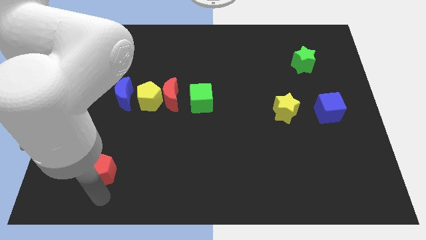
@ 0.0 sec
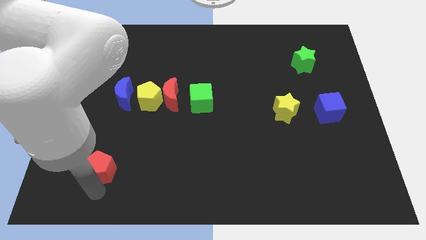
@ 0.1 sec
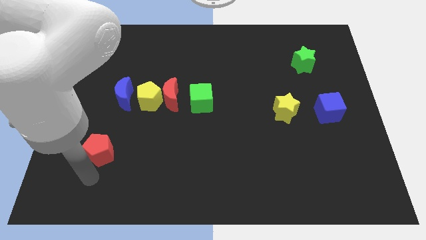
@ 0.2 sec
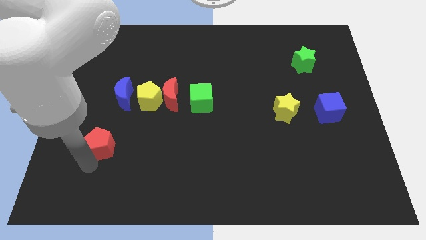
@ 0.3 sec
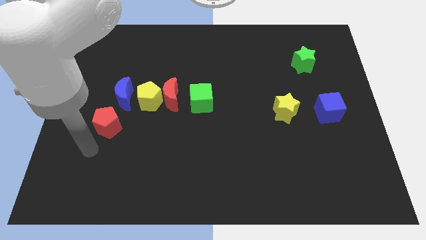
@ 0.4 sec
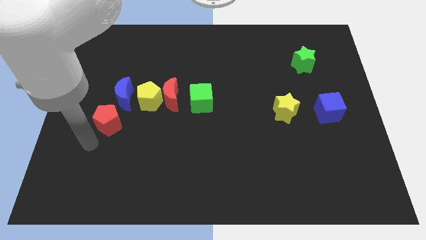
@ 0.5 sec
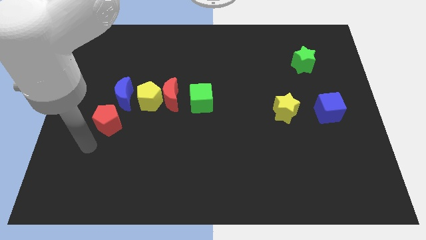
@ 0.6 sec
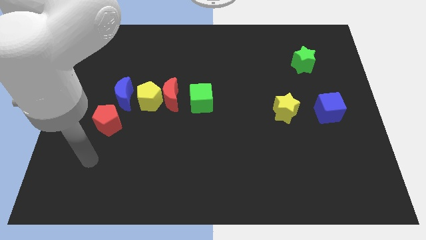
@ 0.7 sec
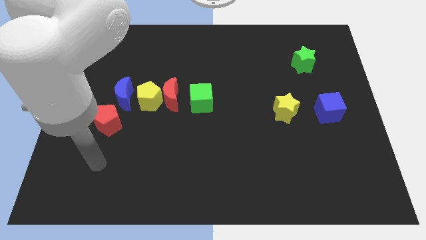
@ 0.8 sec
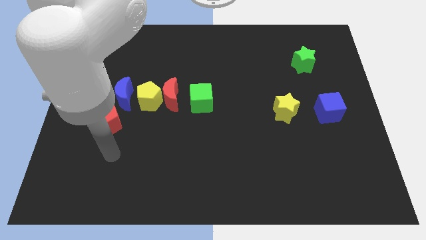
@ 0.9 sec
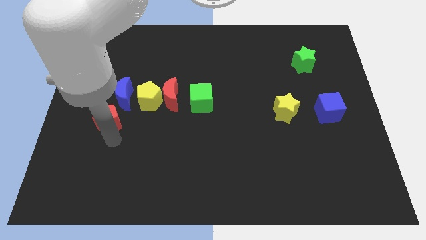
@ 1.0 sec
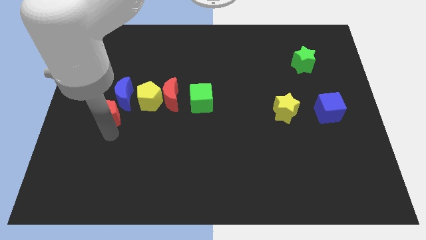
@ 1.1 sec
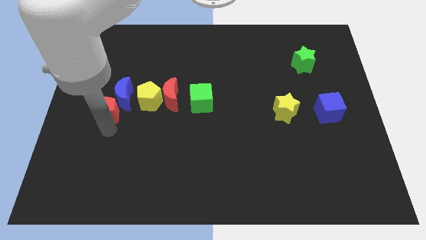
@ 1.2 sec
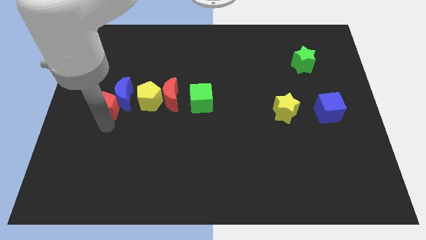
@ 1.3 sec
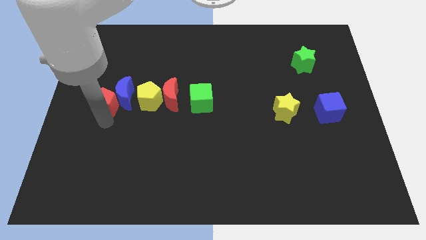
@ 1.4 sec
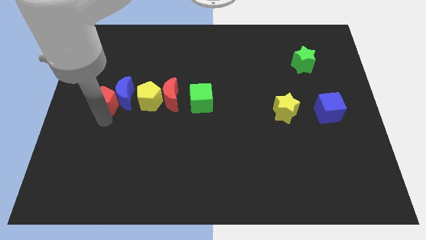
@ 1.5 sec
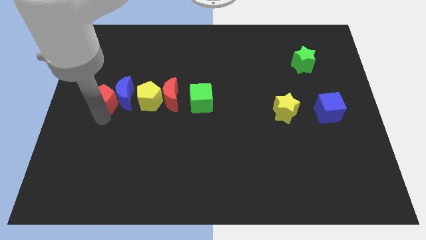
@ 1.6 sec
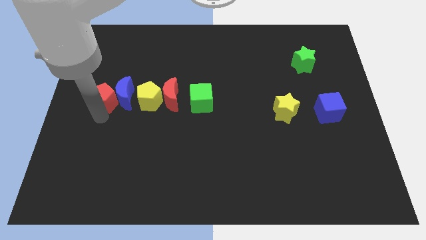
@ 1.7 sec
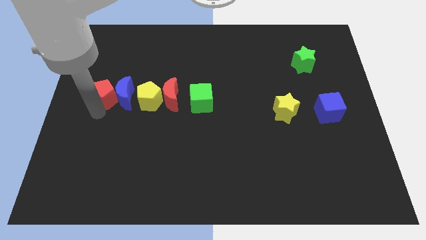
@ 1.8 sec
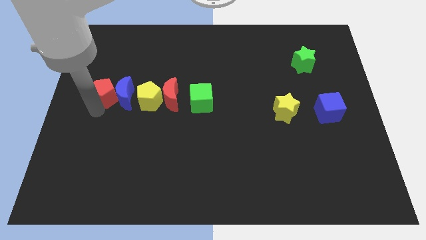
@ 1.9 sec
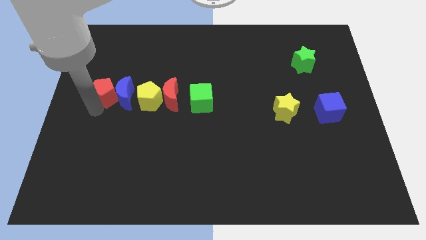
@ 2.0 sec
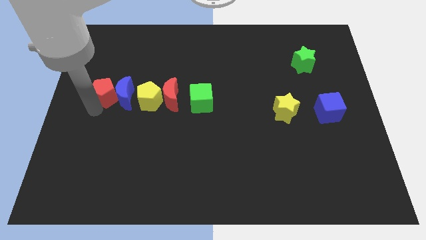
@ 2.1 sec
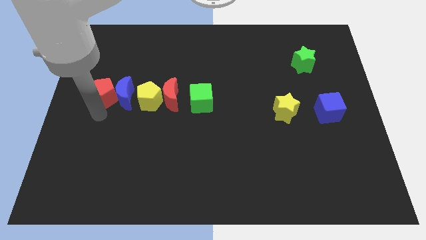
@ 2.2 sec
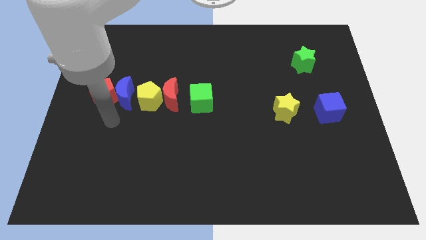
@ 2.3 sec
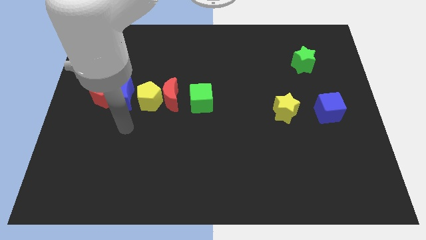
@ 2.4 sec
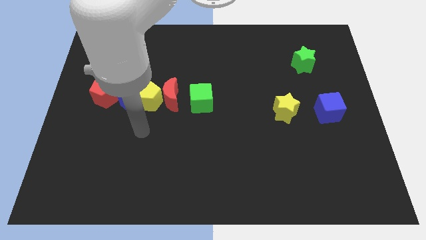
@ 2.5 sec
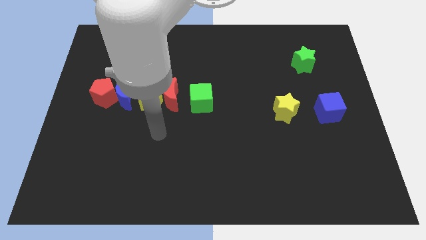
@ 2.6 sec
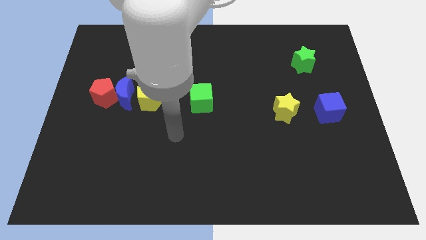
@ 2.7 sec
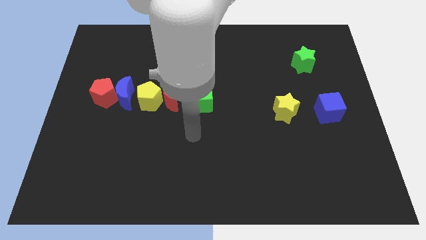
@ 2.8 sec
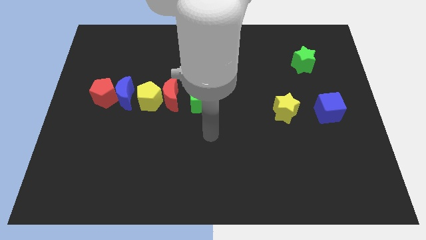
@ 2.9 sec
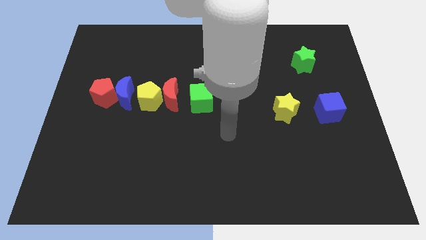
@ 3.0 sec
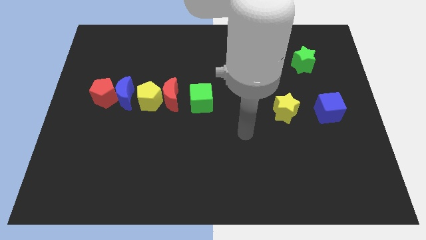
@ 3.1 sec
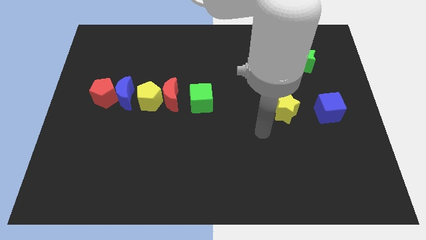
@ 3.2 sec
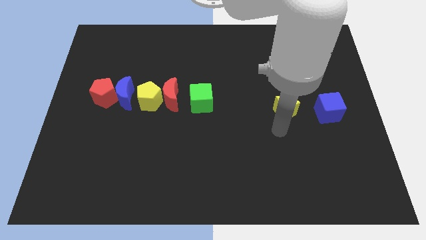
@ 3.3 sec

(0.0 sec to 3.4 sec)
place the red pentagon to the left side of blue moon

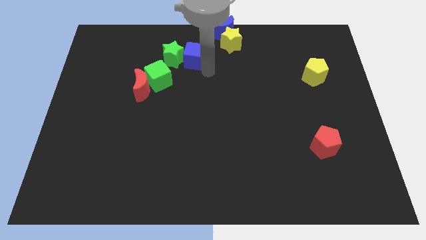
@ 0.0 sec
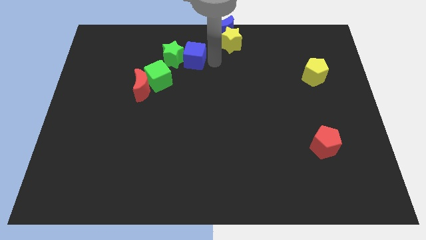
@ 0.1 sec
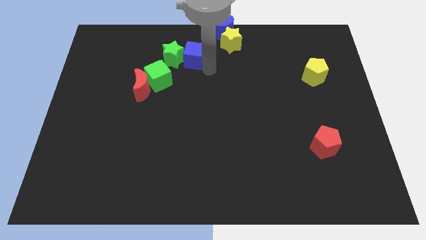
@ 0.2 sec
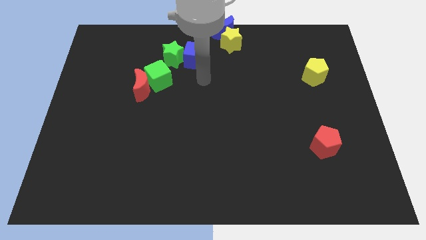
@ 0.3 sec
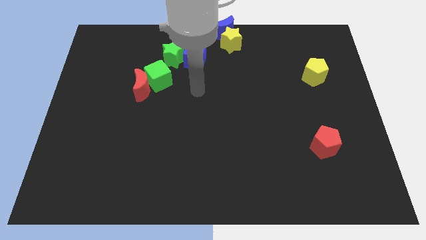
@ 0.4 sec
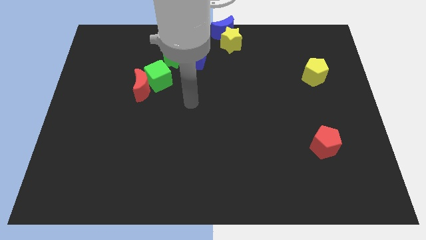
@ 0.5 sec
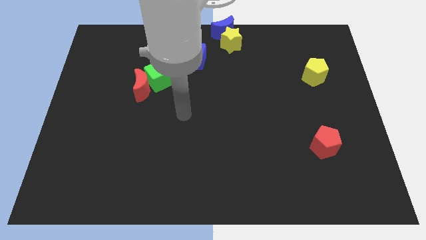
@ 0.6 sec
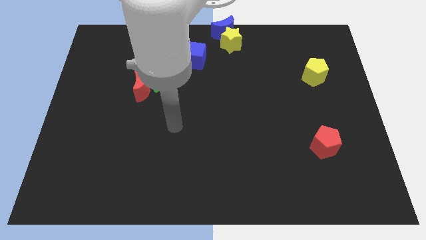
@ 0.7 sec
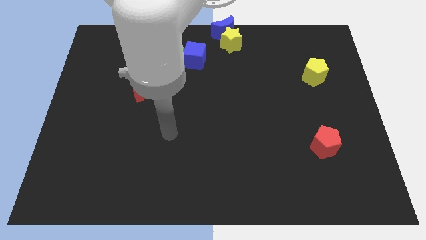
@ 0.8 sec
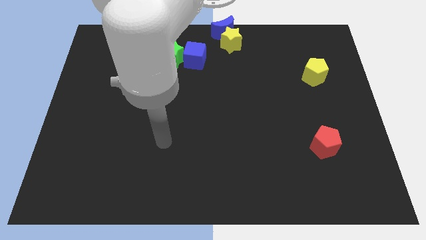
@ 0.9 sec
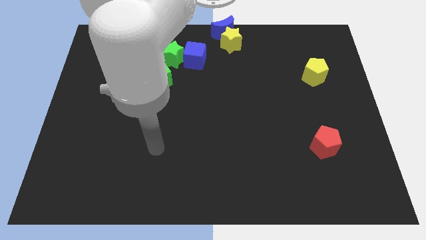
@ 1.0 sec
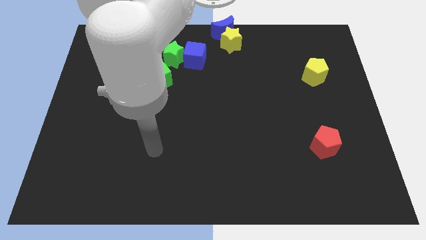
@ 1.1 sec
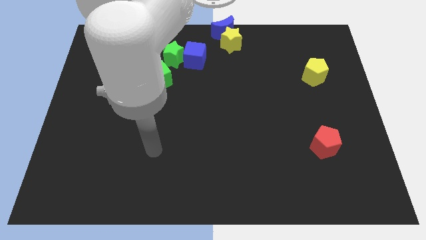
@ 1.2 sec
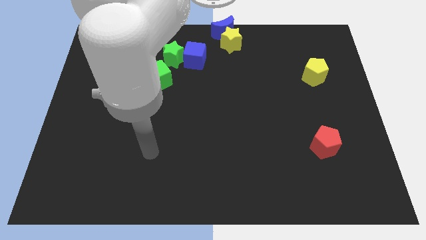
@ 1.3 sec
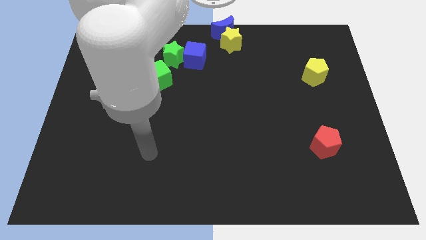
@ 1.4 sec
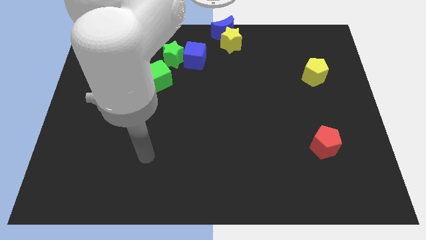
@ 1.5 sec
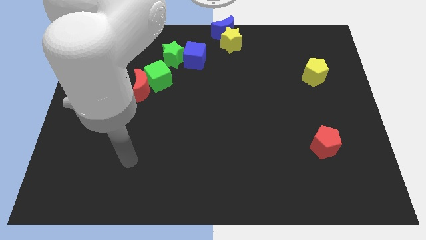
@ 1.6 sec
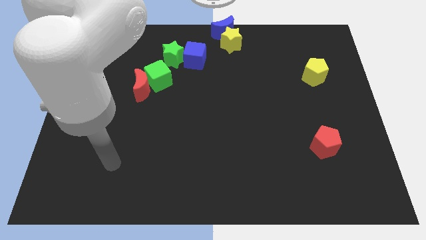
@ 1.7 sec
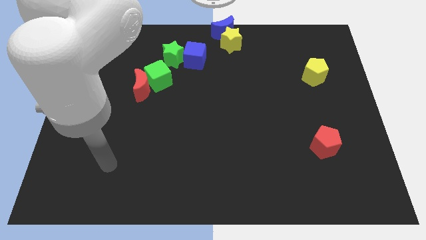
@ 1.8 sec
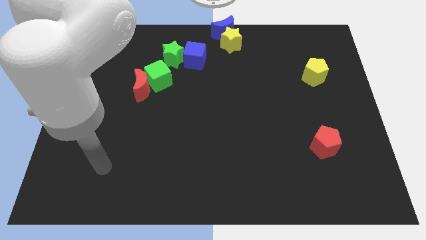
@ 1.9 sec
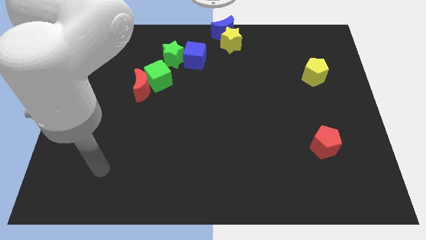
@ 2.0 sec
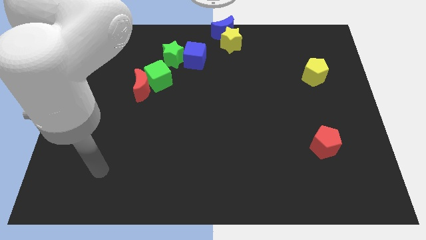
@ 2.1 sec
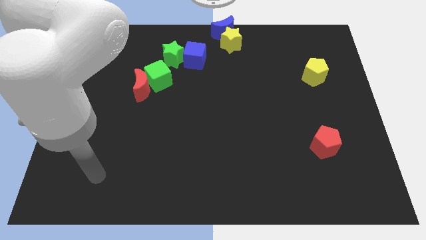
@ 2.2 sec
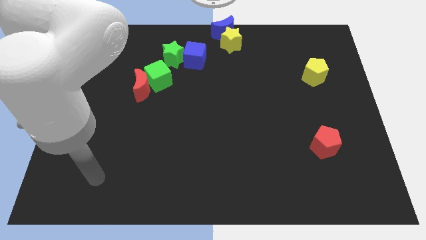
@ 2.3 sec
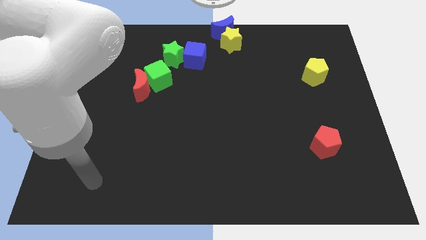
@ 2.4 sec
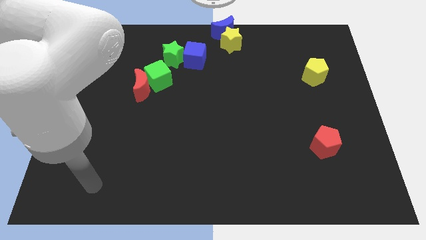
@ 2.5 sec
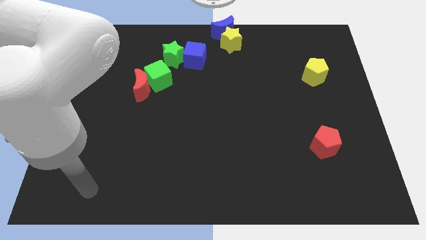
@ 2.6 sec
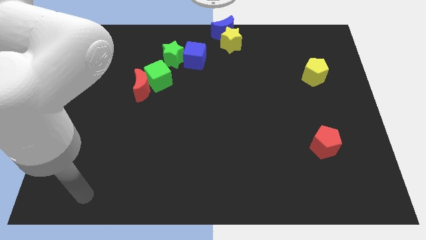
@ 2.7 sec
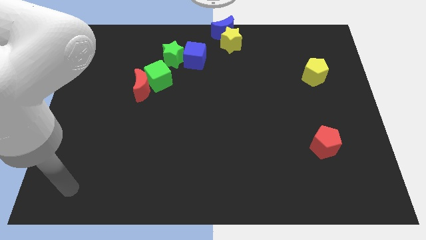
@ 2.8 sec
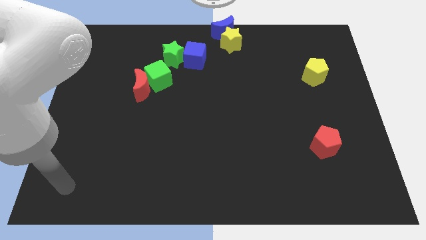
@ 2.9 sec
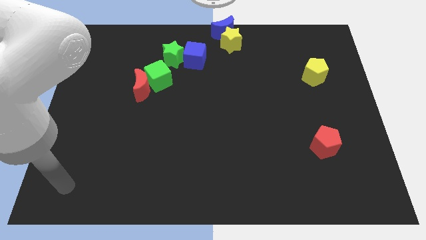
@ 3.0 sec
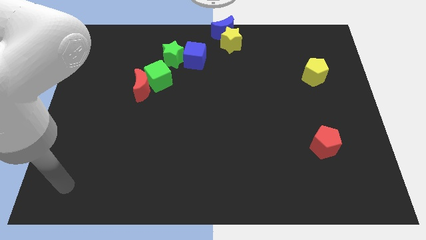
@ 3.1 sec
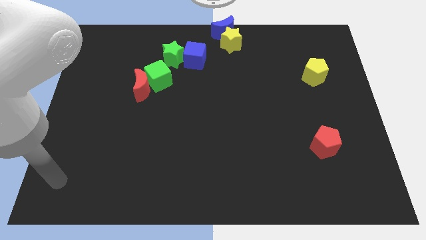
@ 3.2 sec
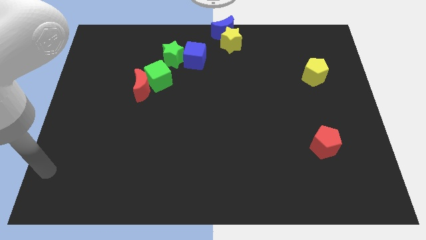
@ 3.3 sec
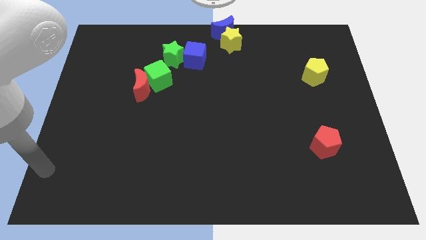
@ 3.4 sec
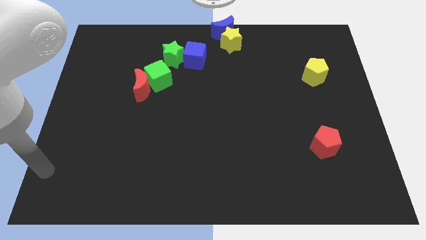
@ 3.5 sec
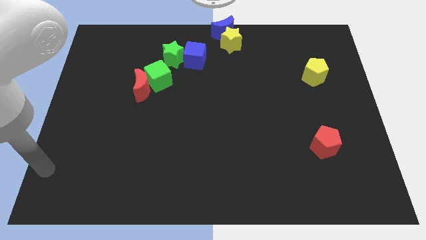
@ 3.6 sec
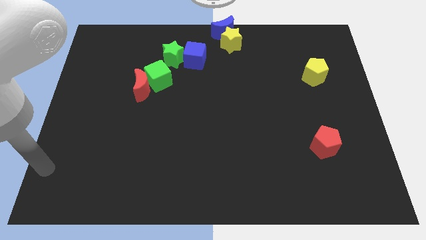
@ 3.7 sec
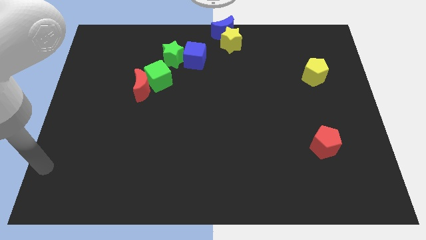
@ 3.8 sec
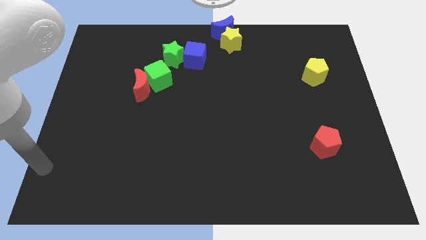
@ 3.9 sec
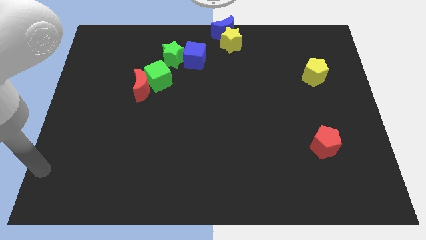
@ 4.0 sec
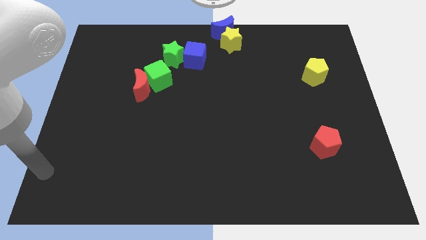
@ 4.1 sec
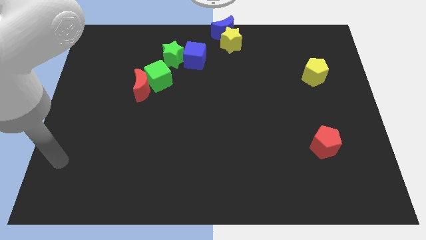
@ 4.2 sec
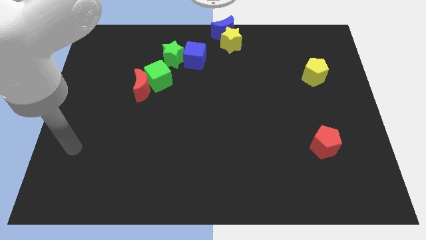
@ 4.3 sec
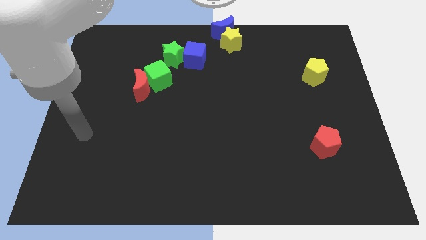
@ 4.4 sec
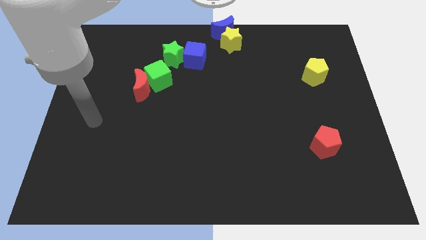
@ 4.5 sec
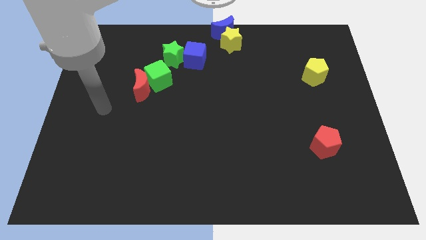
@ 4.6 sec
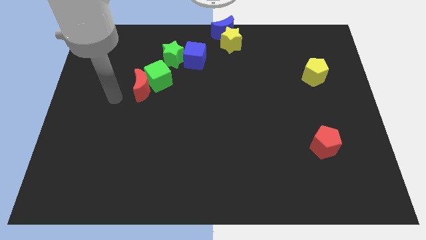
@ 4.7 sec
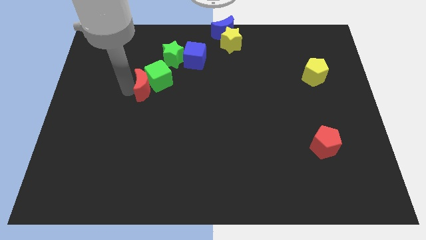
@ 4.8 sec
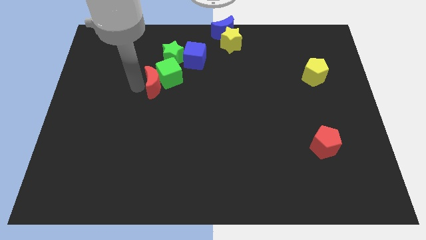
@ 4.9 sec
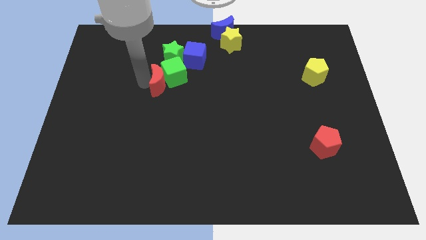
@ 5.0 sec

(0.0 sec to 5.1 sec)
move your arm towards the red crescent on the left top of the board

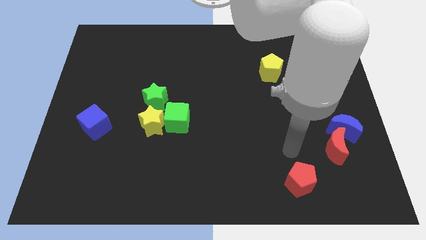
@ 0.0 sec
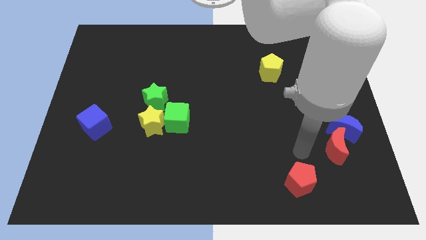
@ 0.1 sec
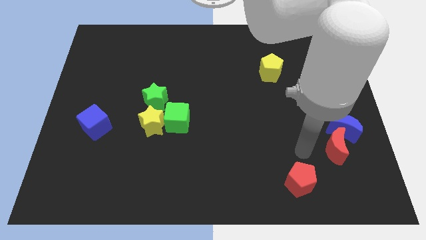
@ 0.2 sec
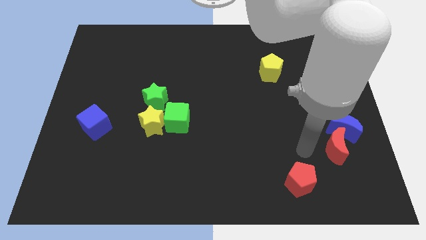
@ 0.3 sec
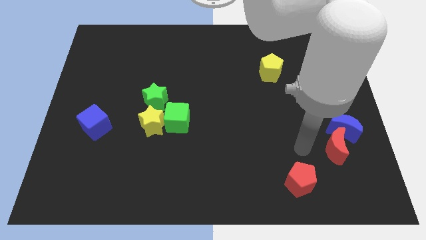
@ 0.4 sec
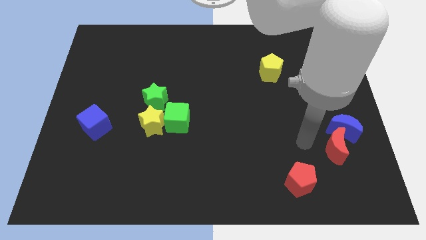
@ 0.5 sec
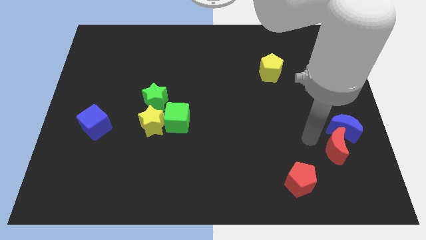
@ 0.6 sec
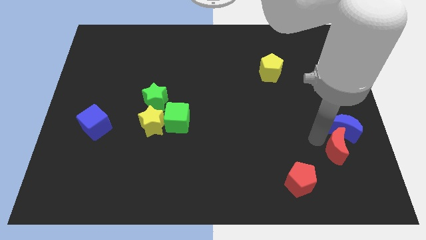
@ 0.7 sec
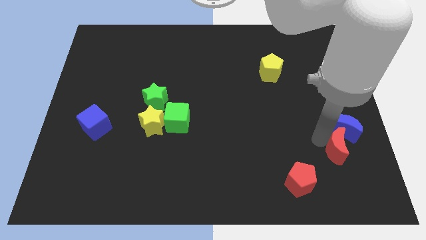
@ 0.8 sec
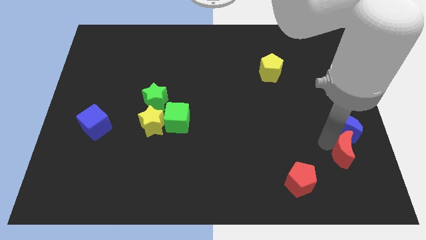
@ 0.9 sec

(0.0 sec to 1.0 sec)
touch the red moon
